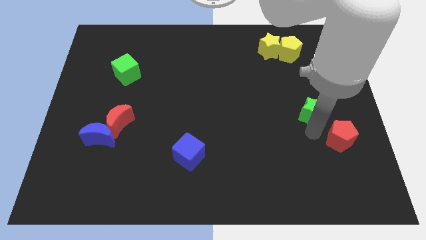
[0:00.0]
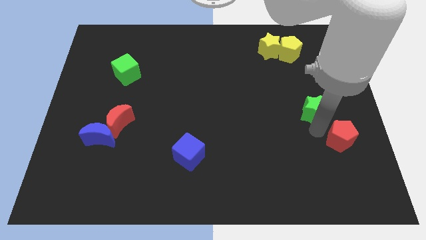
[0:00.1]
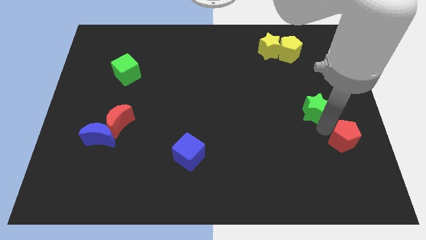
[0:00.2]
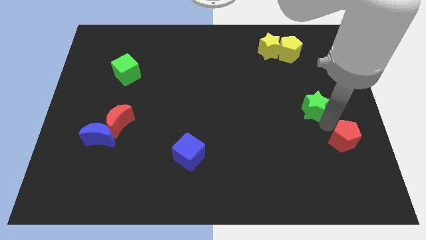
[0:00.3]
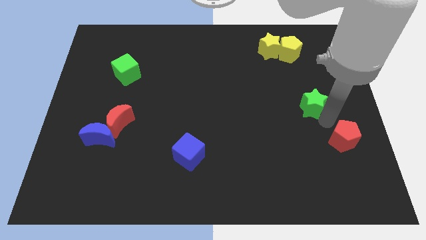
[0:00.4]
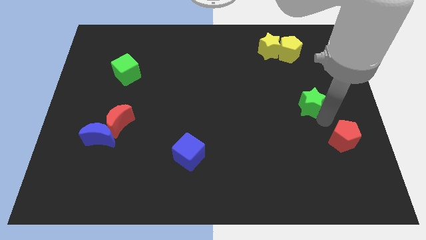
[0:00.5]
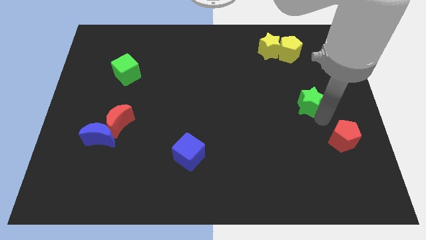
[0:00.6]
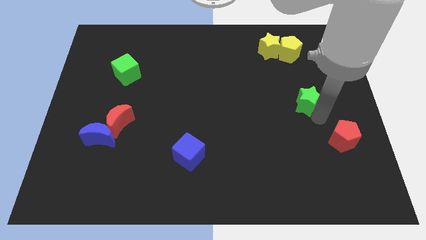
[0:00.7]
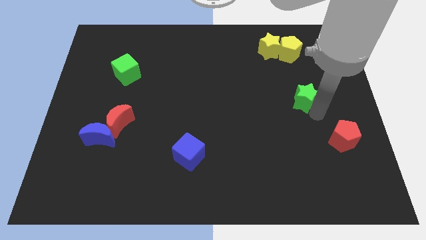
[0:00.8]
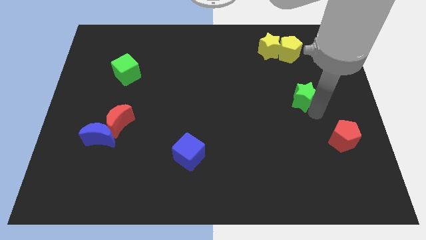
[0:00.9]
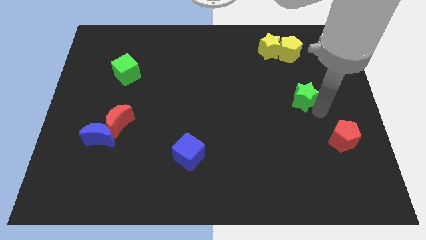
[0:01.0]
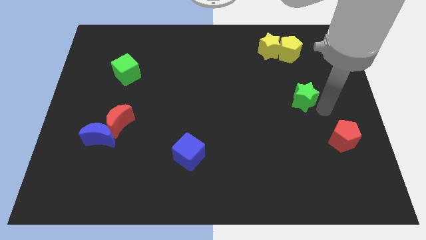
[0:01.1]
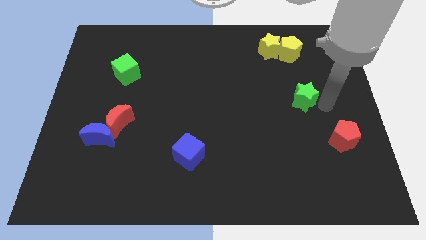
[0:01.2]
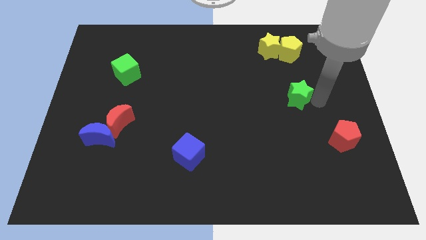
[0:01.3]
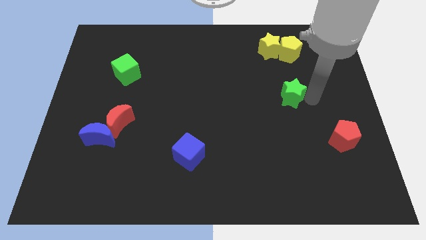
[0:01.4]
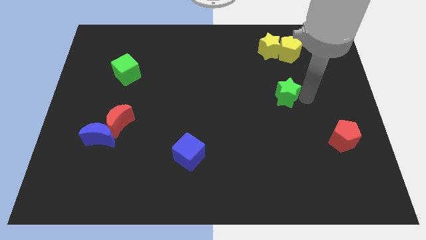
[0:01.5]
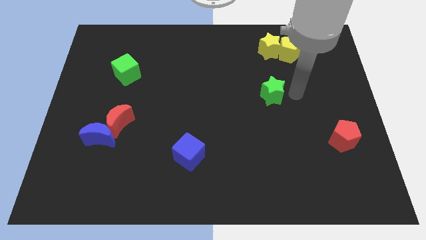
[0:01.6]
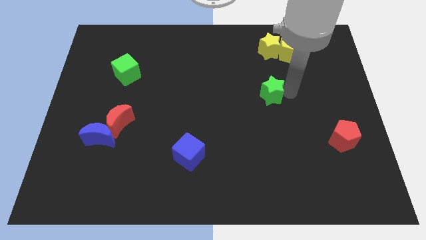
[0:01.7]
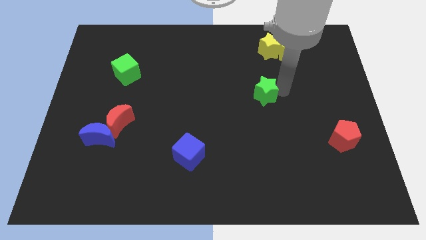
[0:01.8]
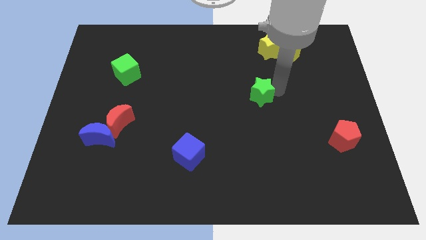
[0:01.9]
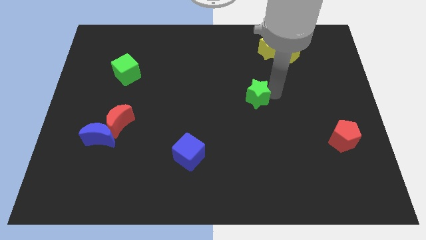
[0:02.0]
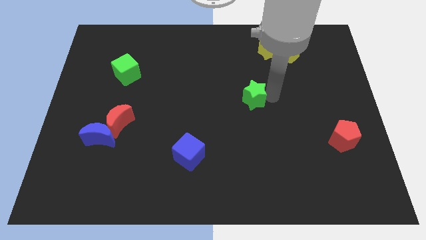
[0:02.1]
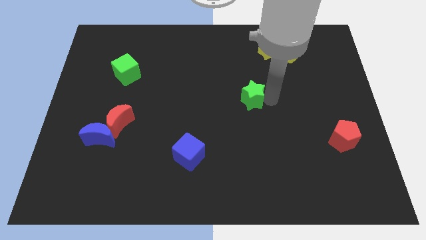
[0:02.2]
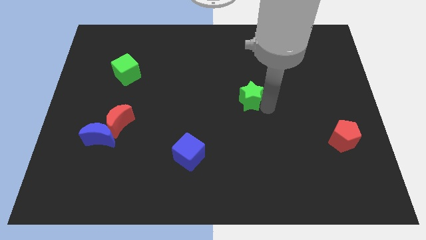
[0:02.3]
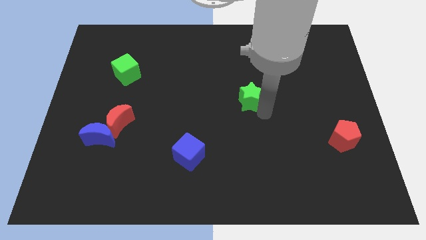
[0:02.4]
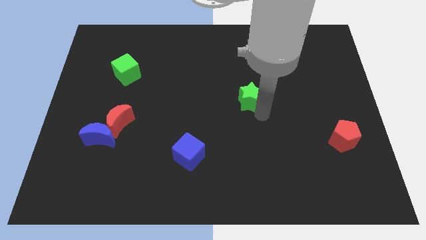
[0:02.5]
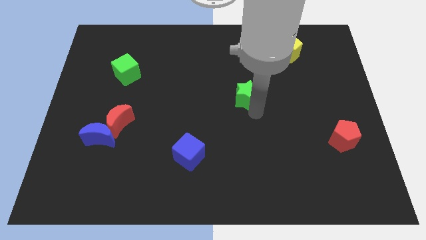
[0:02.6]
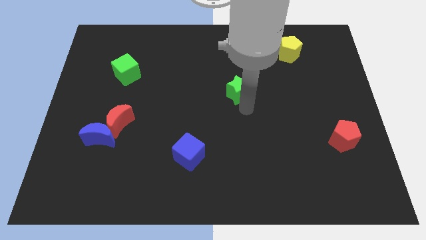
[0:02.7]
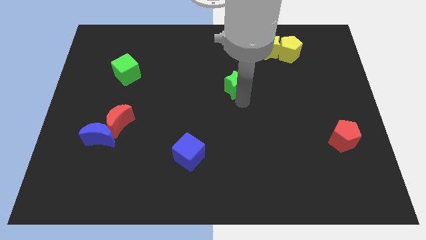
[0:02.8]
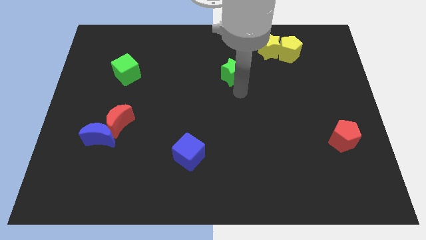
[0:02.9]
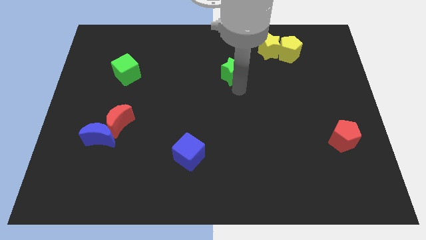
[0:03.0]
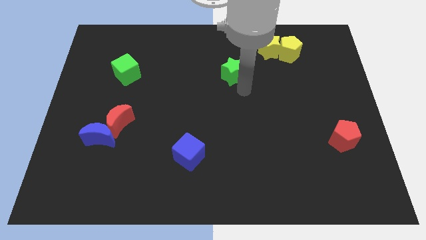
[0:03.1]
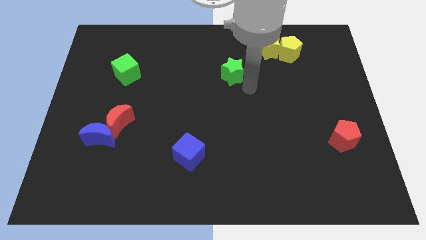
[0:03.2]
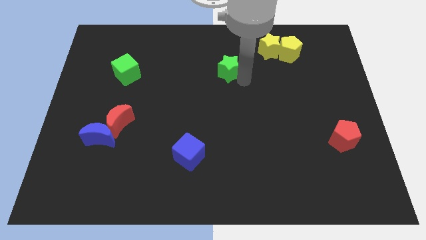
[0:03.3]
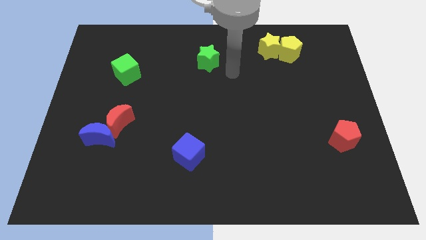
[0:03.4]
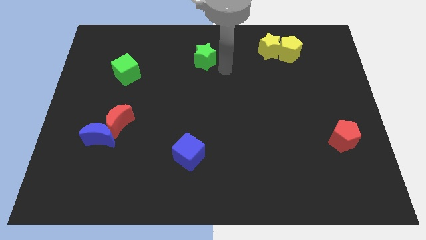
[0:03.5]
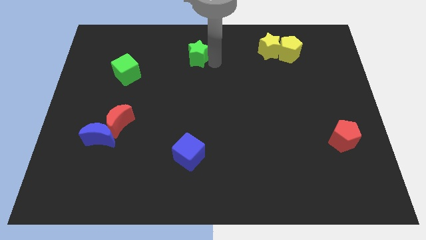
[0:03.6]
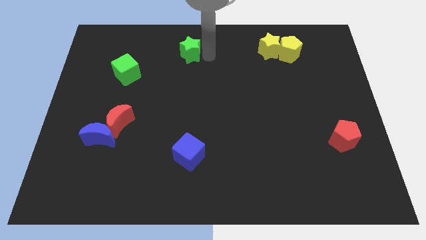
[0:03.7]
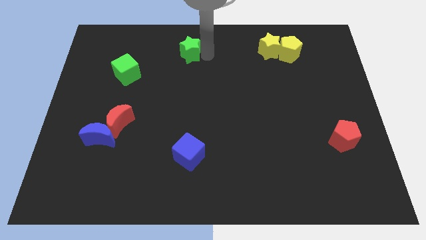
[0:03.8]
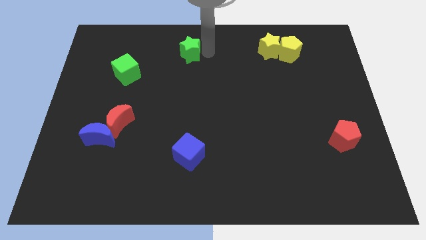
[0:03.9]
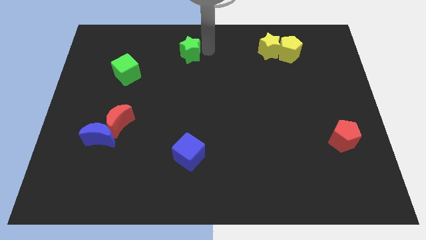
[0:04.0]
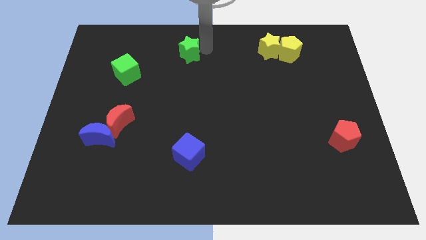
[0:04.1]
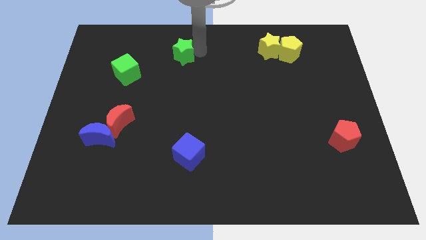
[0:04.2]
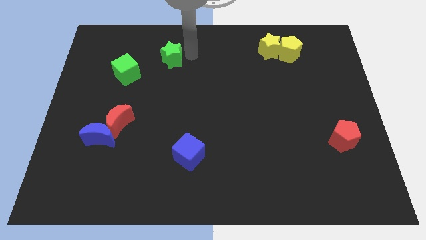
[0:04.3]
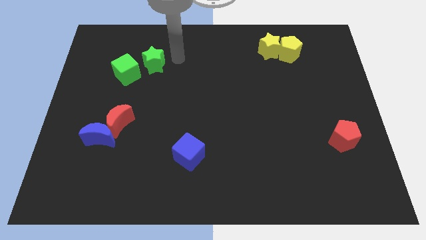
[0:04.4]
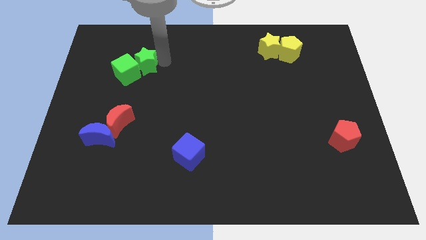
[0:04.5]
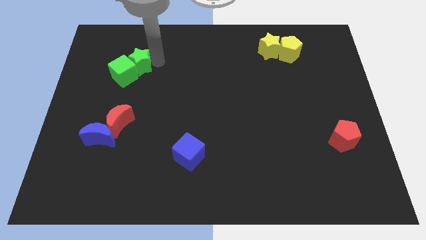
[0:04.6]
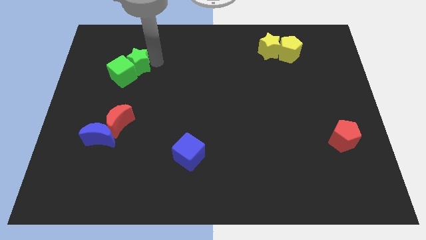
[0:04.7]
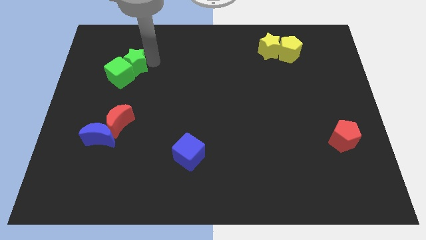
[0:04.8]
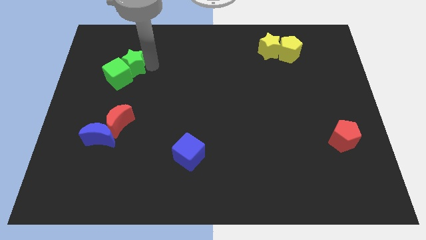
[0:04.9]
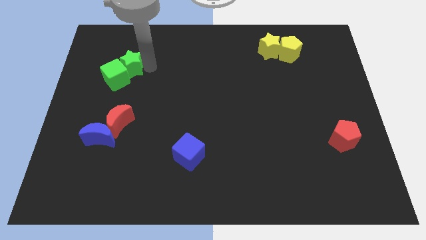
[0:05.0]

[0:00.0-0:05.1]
place the two green objects at the left side of the table

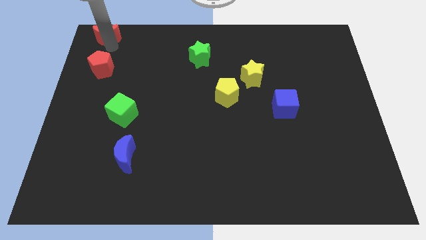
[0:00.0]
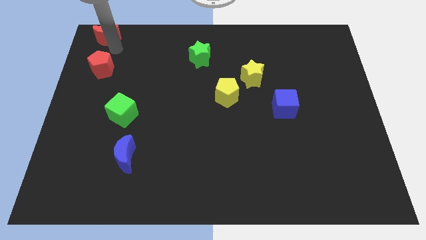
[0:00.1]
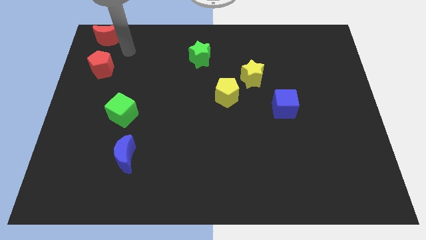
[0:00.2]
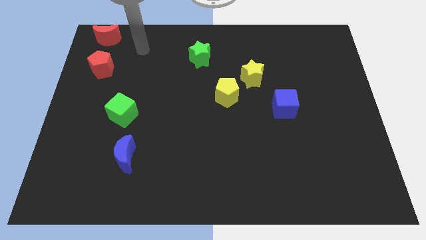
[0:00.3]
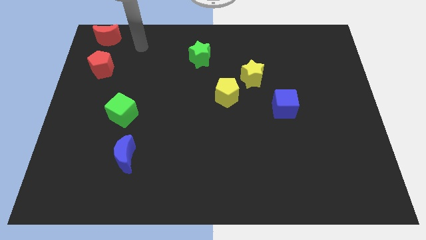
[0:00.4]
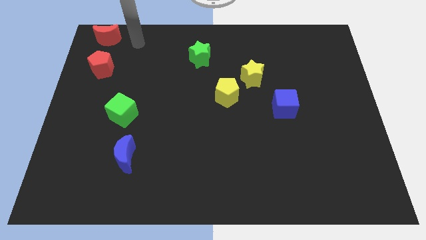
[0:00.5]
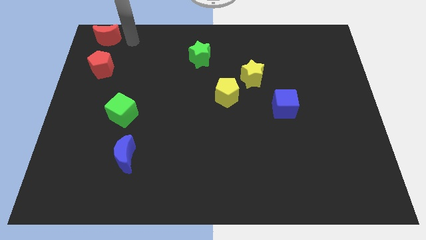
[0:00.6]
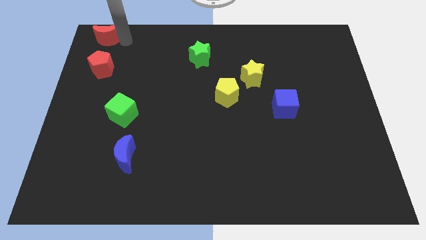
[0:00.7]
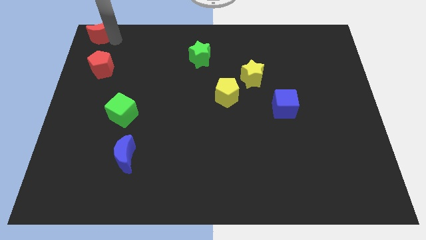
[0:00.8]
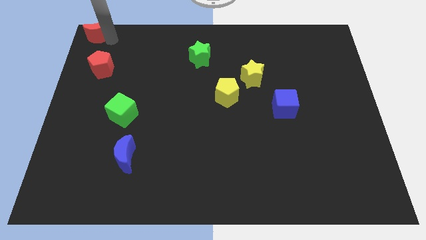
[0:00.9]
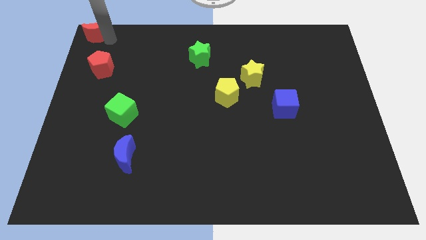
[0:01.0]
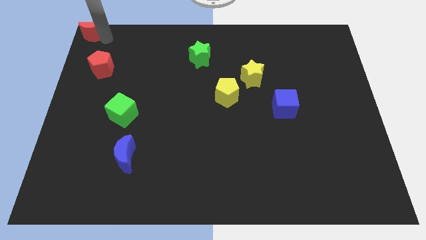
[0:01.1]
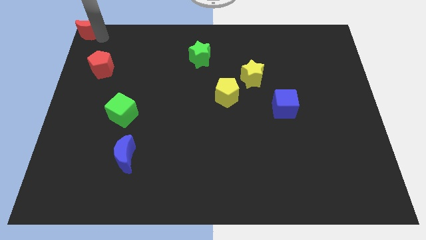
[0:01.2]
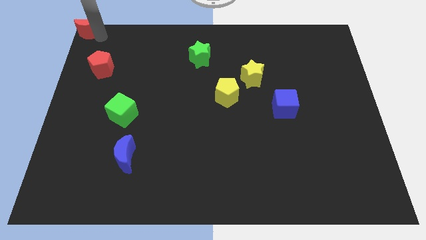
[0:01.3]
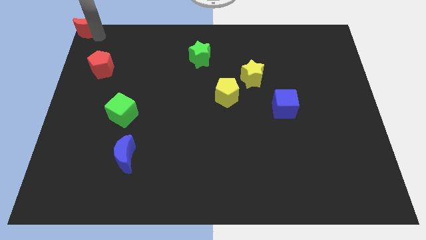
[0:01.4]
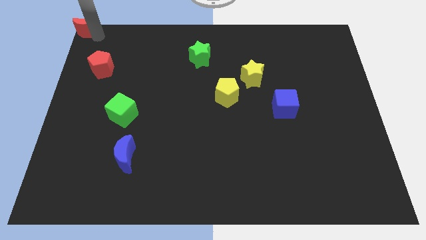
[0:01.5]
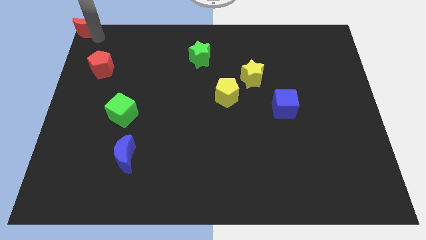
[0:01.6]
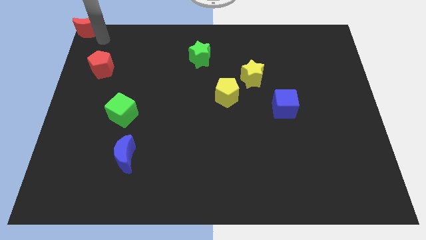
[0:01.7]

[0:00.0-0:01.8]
place your arm below the red moon

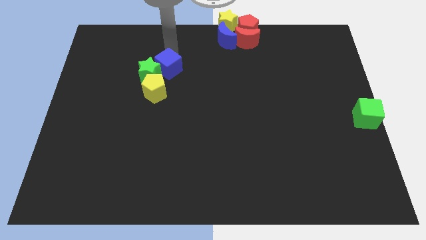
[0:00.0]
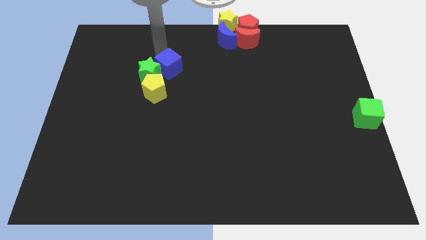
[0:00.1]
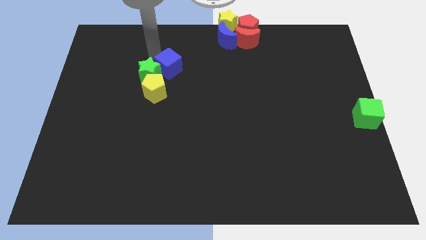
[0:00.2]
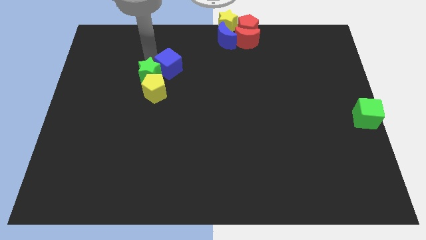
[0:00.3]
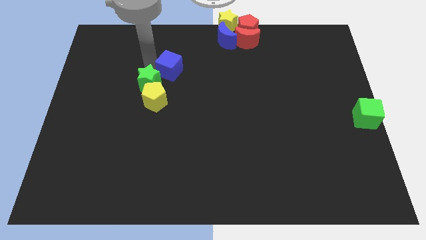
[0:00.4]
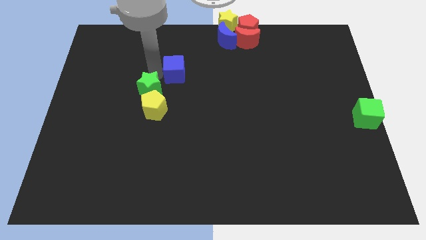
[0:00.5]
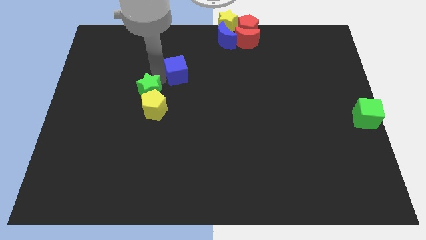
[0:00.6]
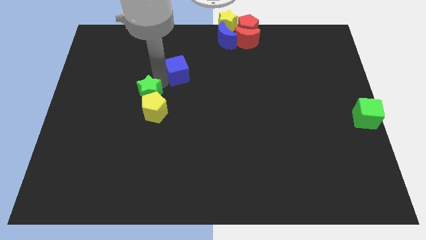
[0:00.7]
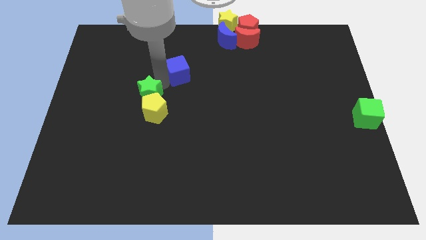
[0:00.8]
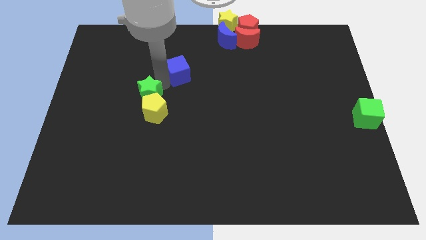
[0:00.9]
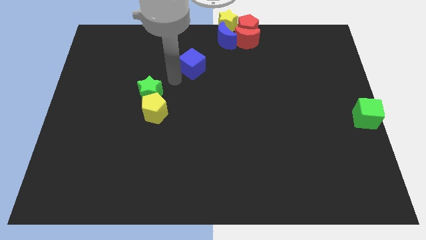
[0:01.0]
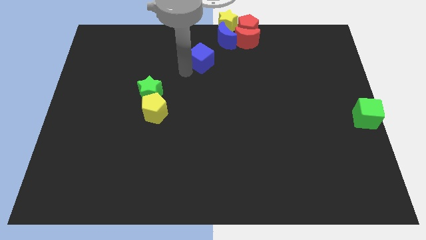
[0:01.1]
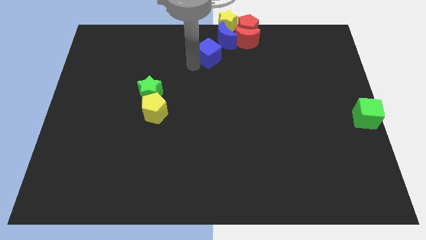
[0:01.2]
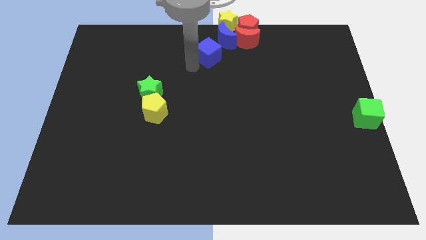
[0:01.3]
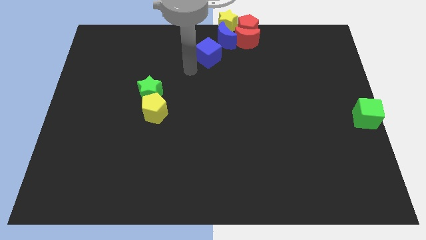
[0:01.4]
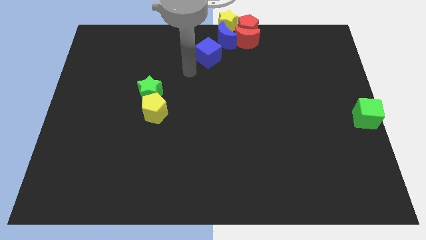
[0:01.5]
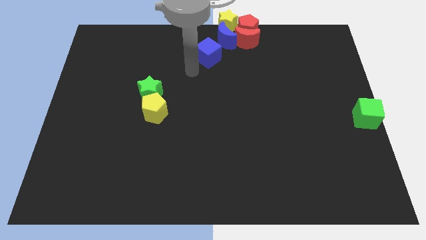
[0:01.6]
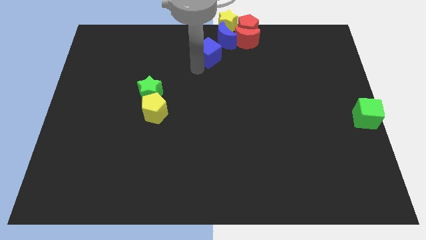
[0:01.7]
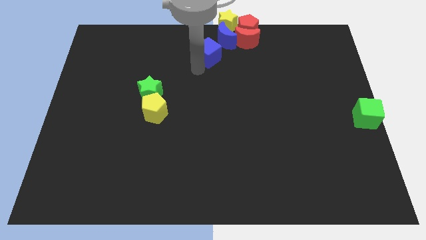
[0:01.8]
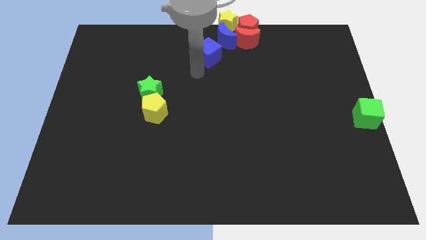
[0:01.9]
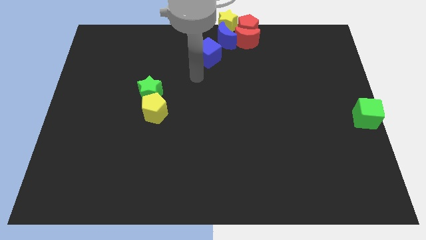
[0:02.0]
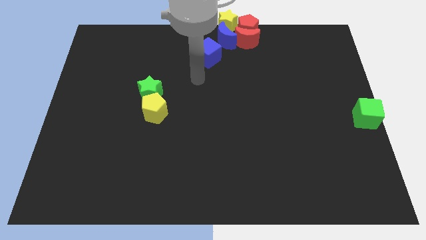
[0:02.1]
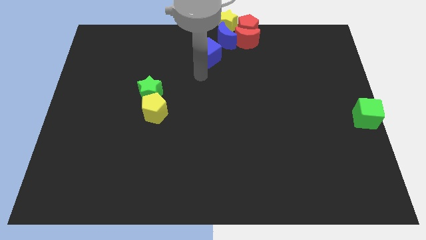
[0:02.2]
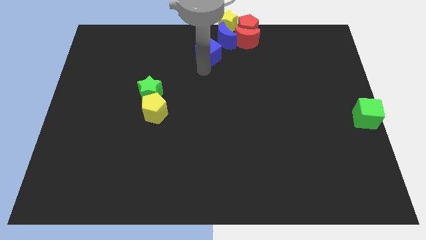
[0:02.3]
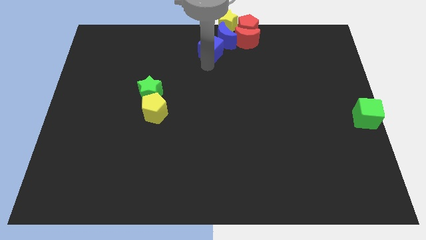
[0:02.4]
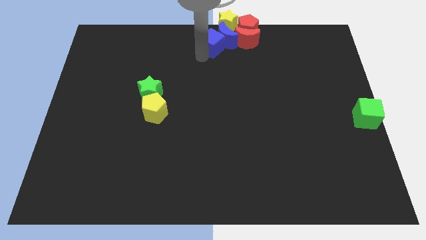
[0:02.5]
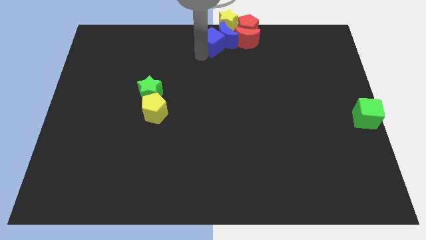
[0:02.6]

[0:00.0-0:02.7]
move the blue cube close to the blue crescent
